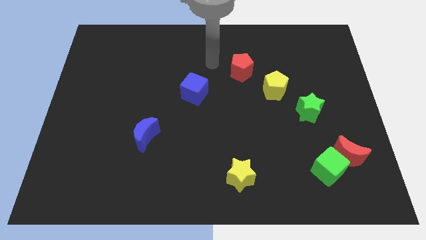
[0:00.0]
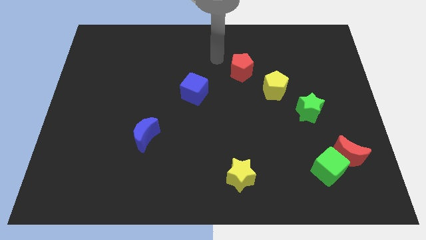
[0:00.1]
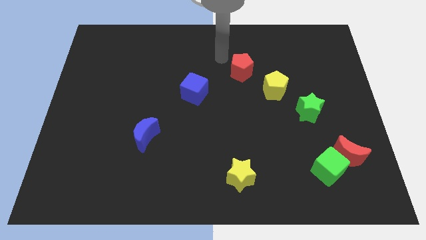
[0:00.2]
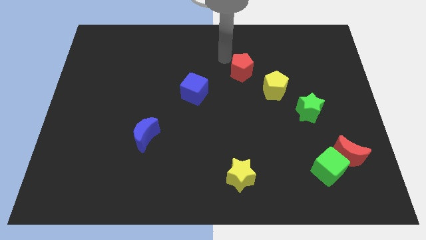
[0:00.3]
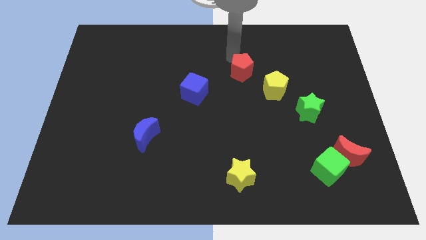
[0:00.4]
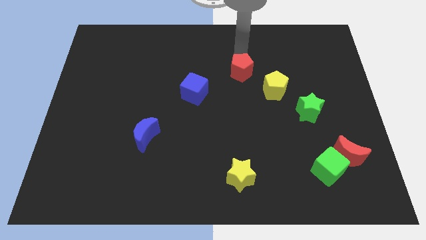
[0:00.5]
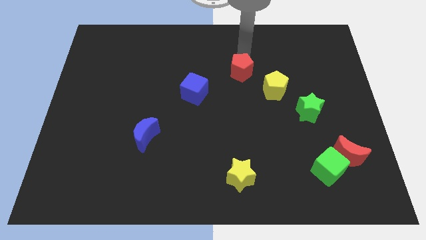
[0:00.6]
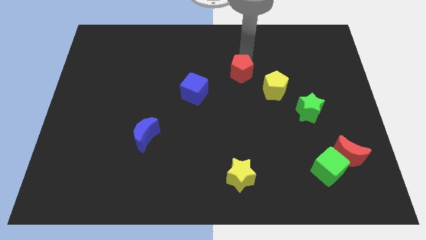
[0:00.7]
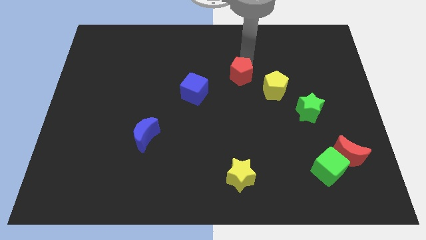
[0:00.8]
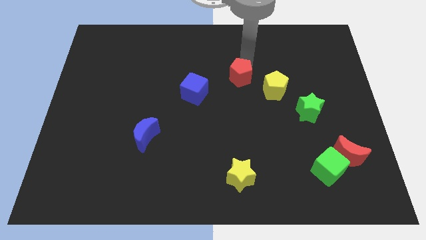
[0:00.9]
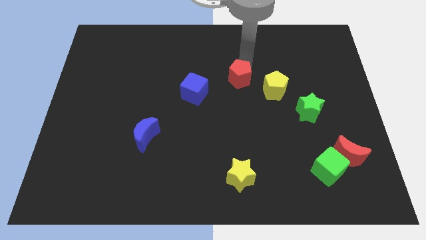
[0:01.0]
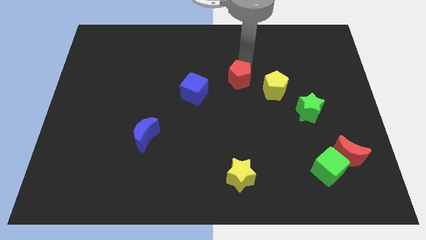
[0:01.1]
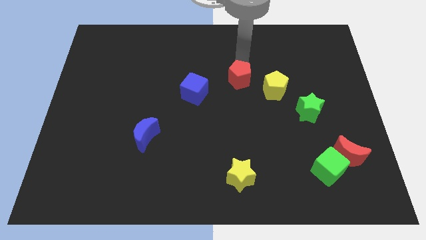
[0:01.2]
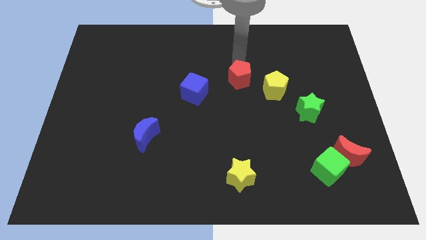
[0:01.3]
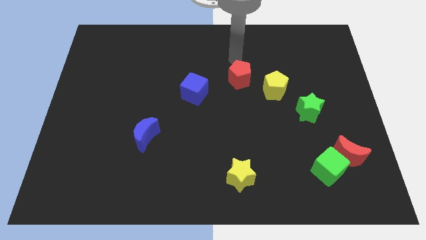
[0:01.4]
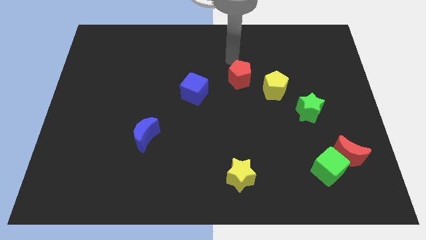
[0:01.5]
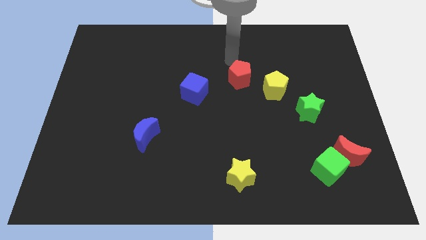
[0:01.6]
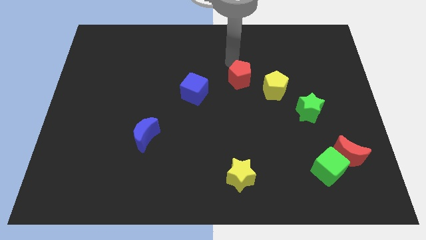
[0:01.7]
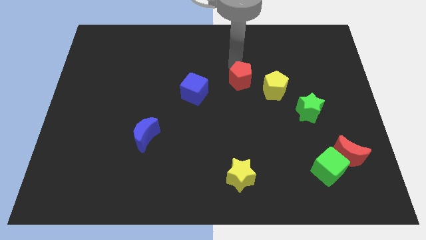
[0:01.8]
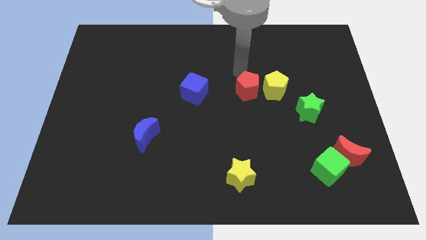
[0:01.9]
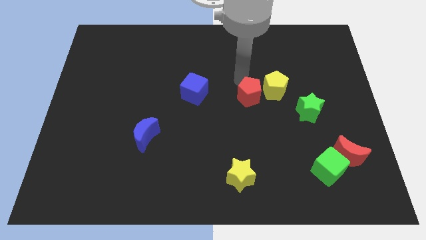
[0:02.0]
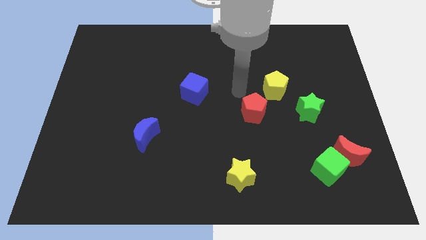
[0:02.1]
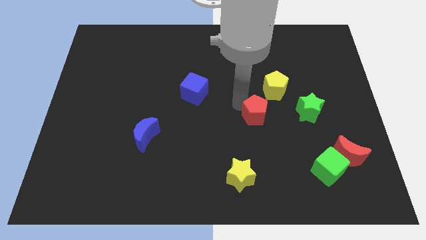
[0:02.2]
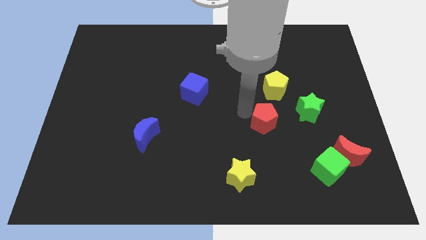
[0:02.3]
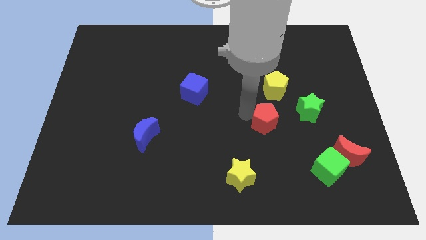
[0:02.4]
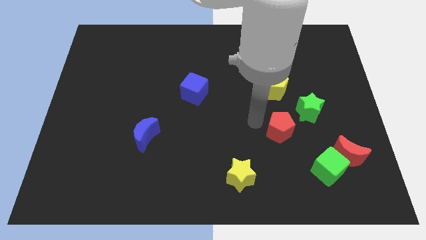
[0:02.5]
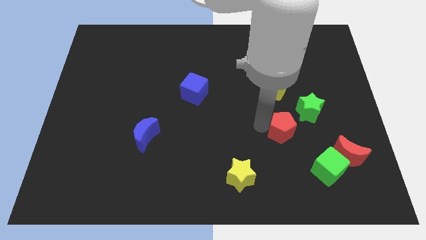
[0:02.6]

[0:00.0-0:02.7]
push the red pentagon to the bottom of the yellow pentagon

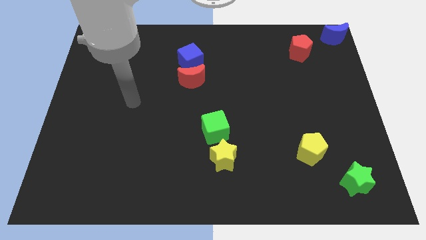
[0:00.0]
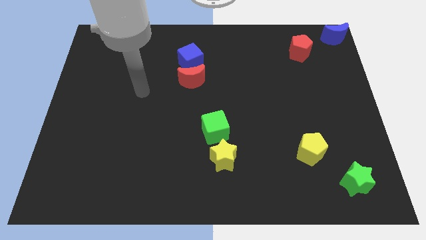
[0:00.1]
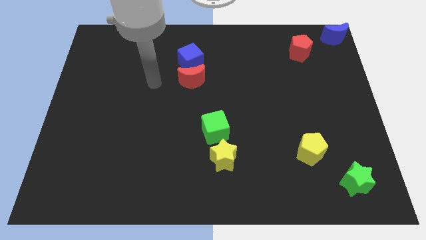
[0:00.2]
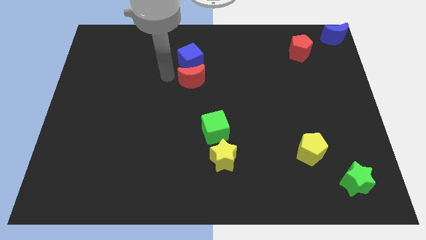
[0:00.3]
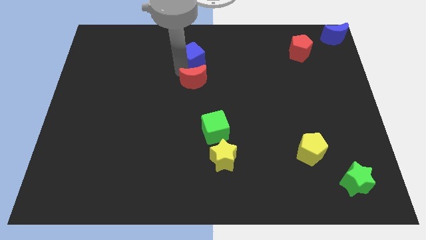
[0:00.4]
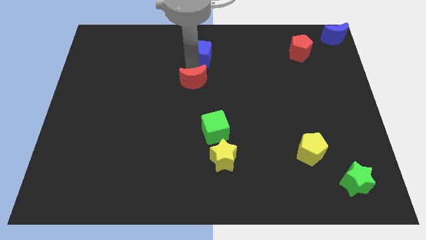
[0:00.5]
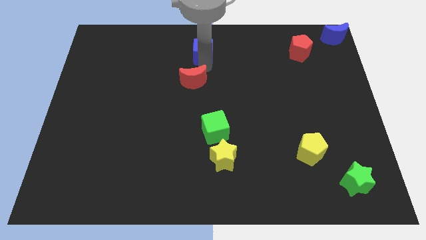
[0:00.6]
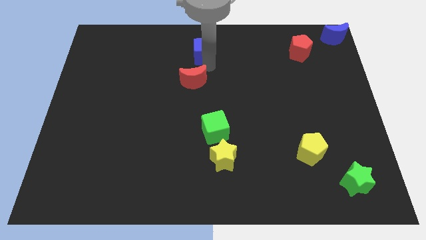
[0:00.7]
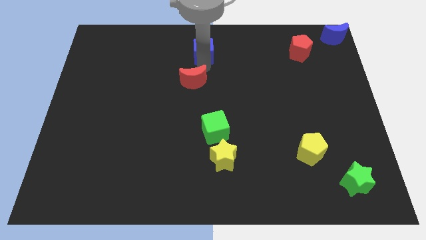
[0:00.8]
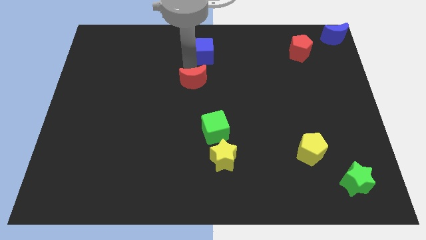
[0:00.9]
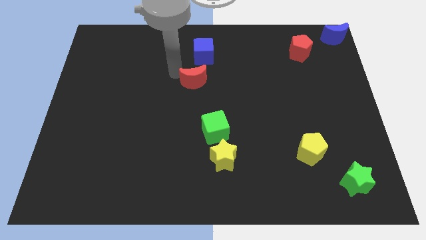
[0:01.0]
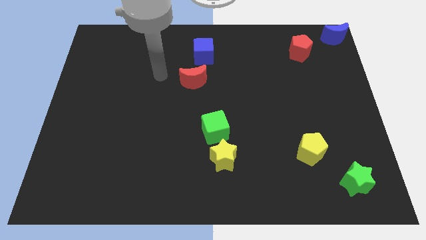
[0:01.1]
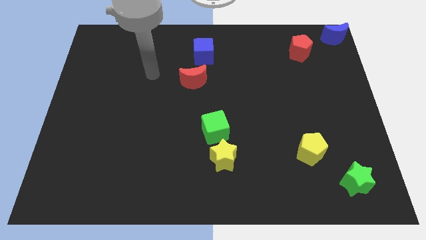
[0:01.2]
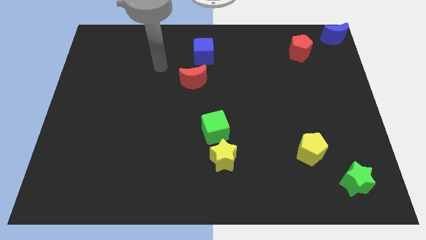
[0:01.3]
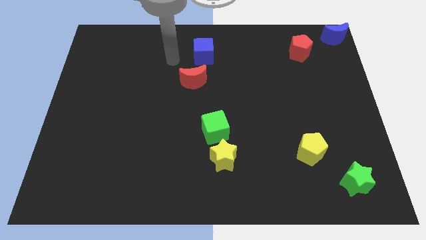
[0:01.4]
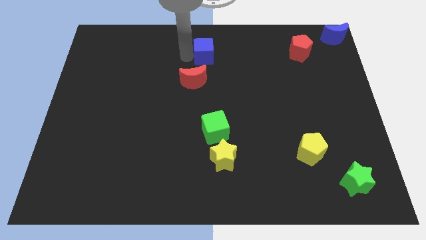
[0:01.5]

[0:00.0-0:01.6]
separate the blue cube and the red crescent

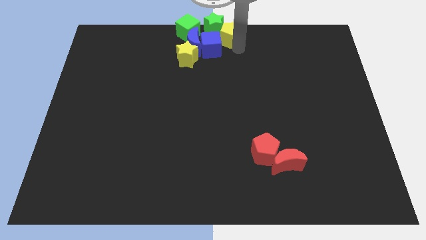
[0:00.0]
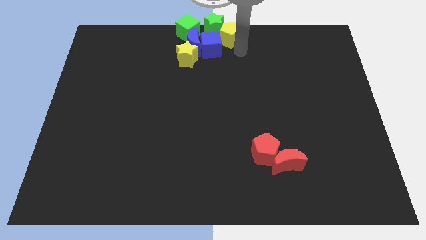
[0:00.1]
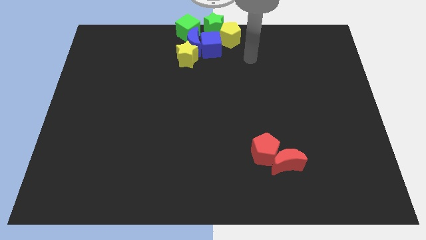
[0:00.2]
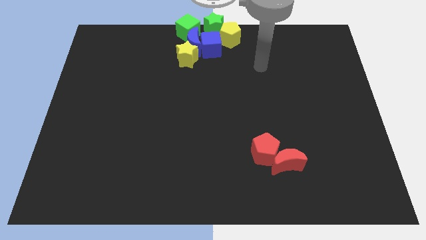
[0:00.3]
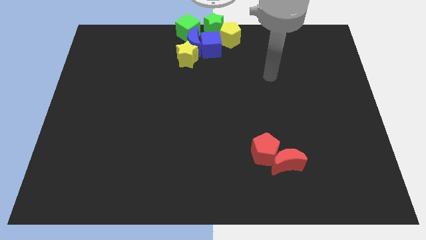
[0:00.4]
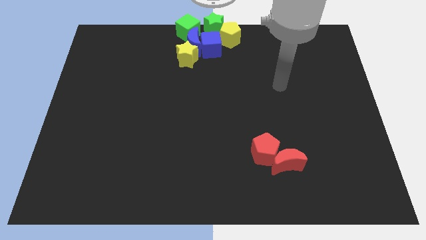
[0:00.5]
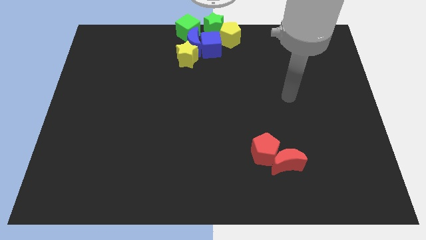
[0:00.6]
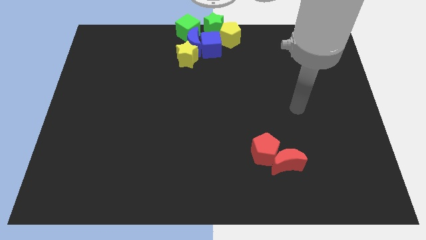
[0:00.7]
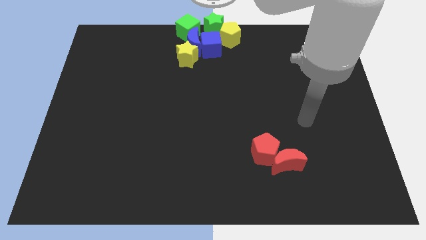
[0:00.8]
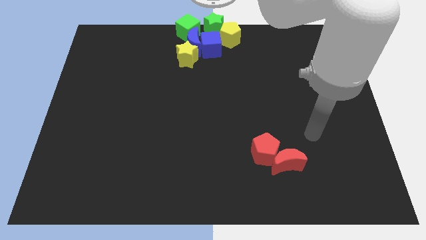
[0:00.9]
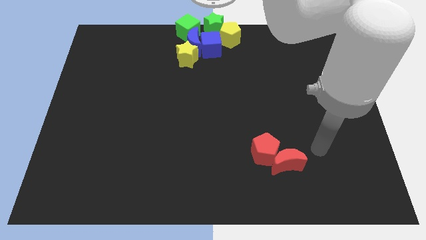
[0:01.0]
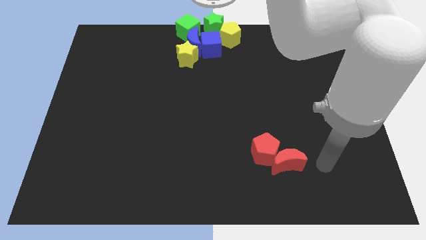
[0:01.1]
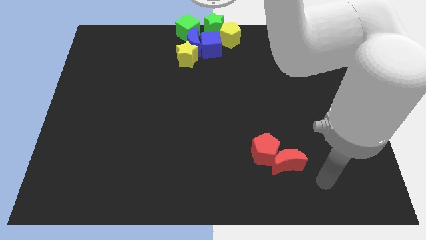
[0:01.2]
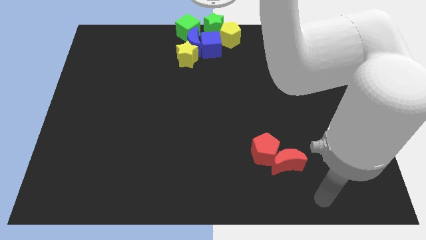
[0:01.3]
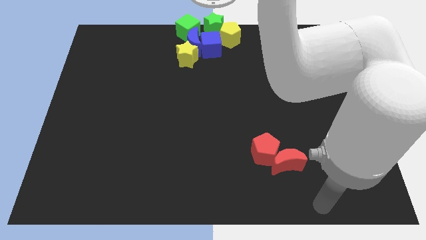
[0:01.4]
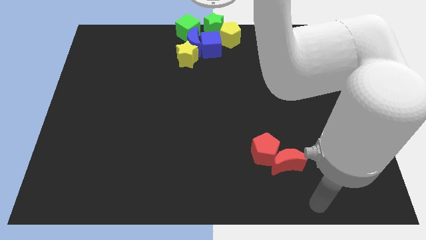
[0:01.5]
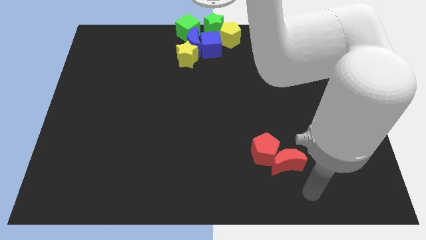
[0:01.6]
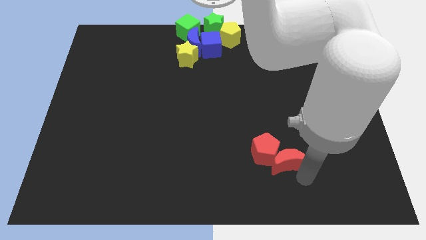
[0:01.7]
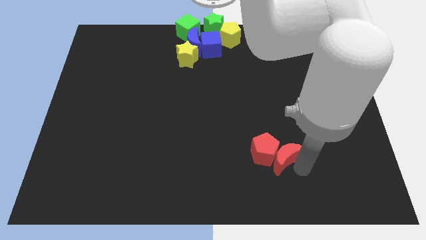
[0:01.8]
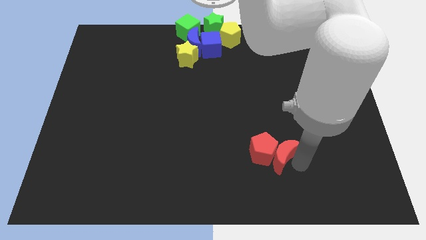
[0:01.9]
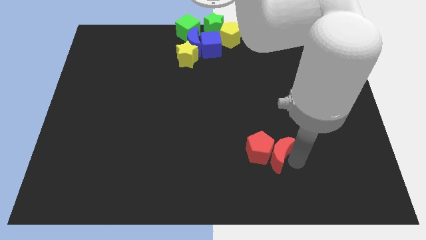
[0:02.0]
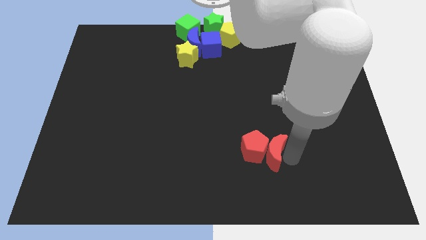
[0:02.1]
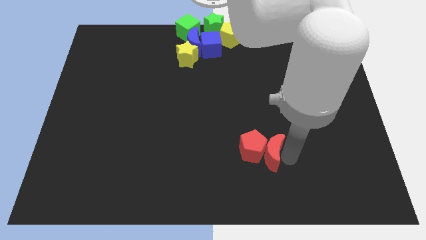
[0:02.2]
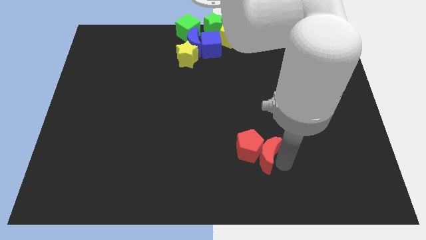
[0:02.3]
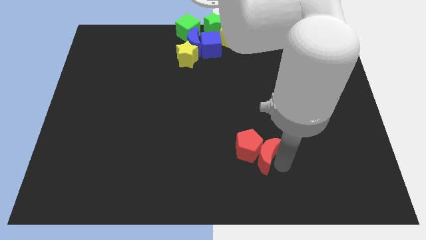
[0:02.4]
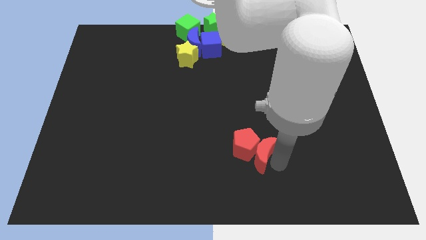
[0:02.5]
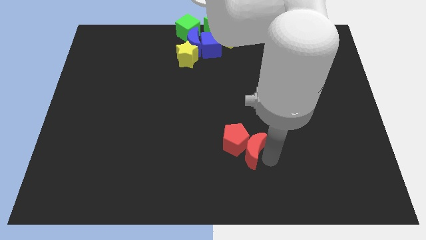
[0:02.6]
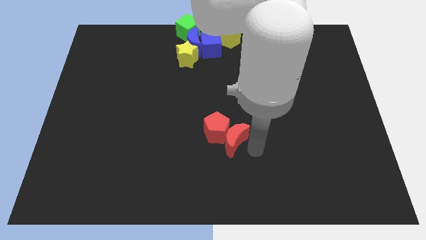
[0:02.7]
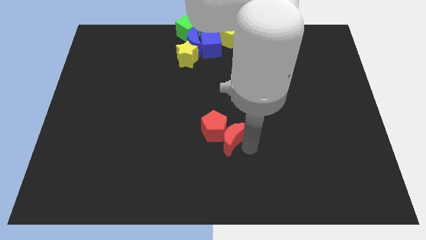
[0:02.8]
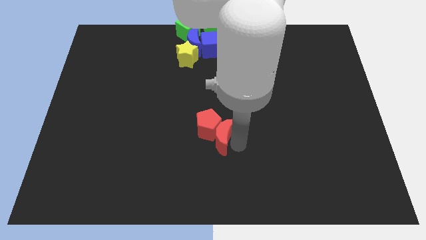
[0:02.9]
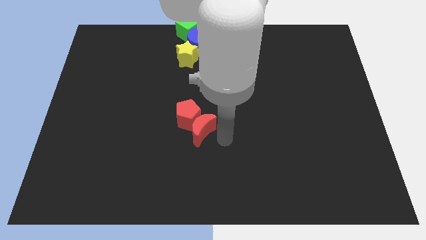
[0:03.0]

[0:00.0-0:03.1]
move the red blocks together to the center of the board

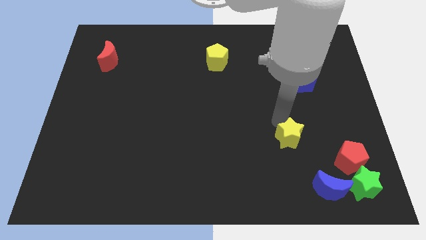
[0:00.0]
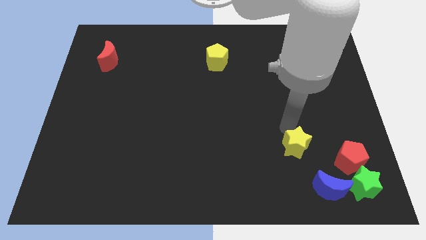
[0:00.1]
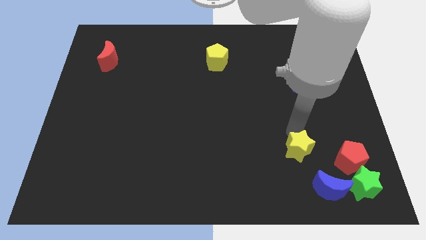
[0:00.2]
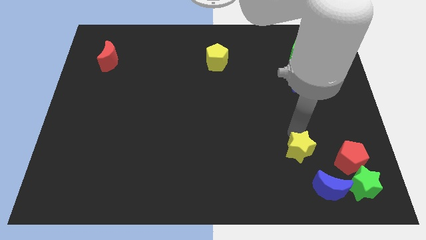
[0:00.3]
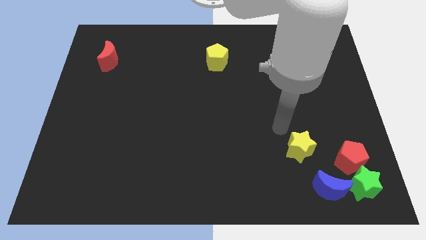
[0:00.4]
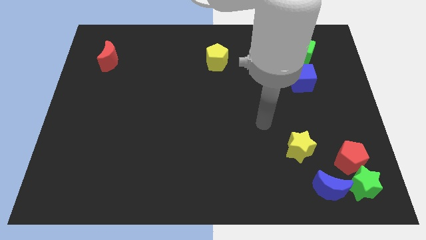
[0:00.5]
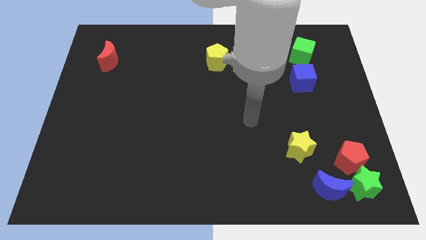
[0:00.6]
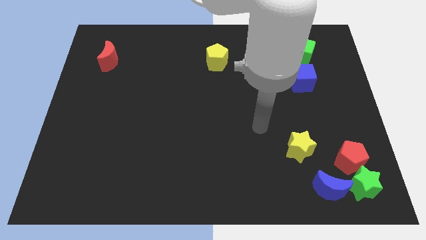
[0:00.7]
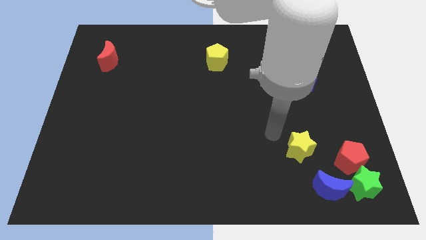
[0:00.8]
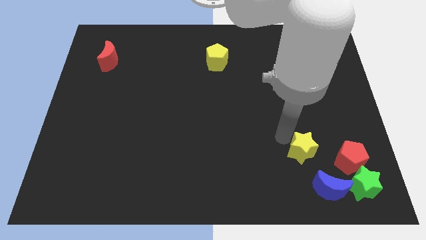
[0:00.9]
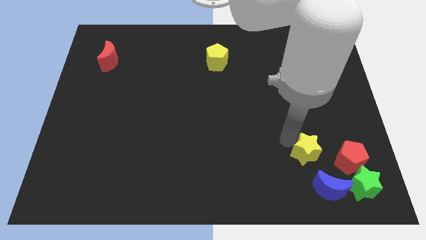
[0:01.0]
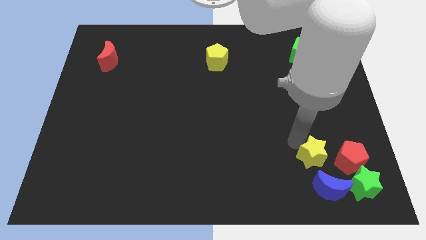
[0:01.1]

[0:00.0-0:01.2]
push the yellow star to the top of the blue crescent

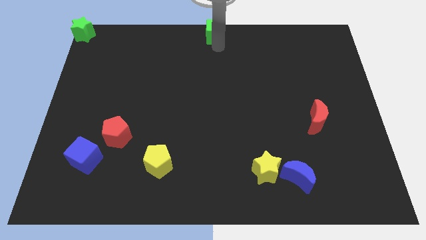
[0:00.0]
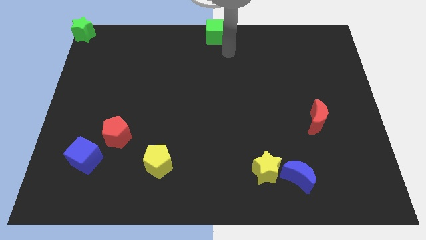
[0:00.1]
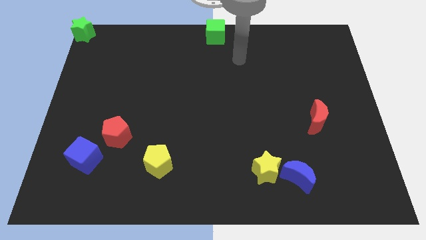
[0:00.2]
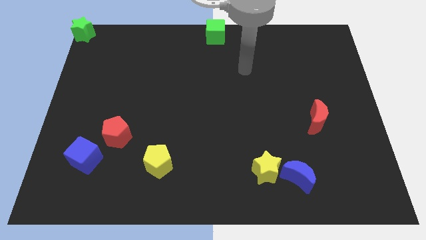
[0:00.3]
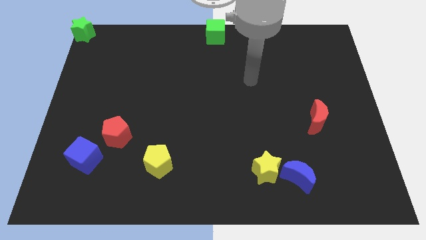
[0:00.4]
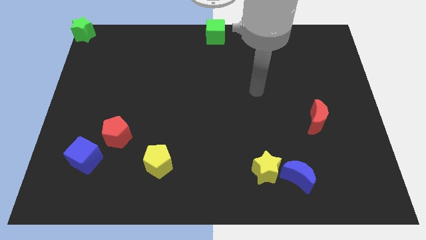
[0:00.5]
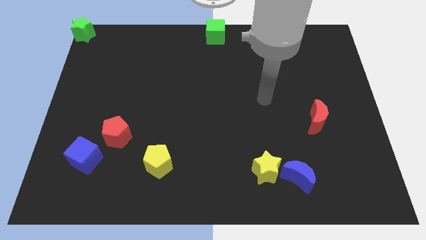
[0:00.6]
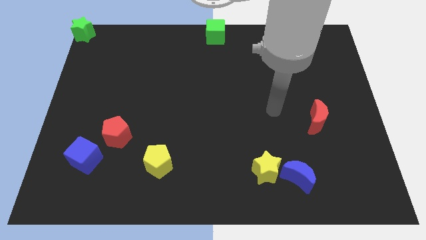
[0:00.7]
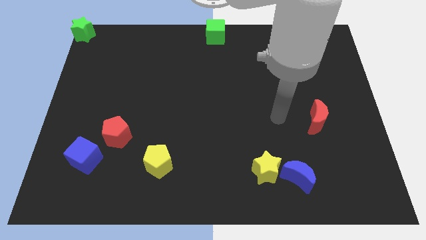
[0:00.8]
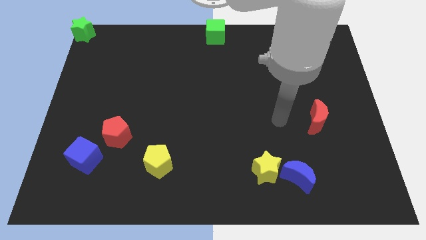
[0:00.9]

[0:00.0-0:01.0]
move your arm away from green cube
